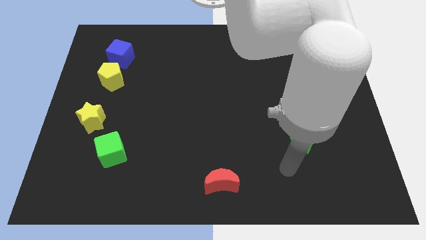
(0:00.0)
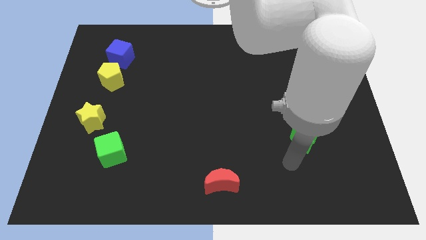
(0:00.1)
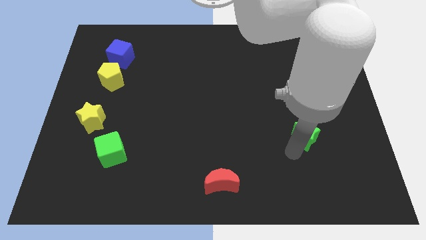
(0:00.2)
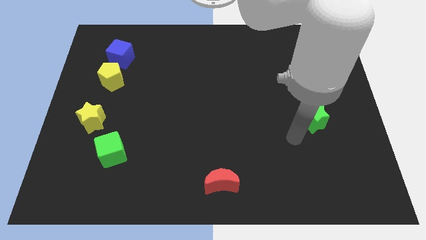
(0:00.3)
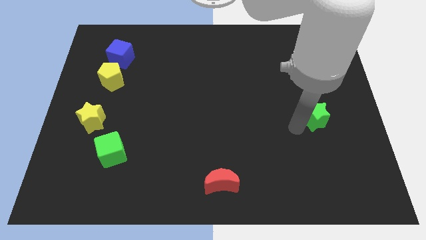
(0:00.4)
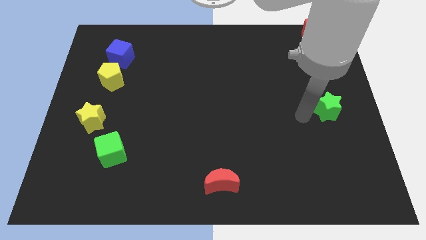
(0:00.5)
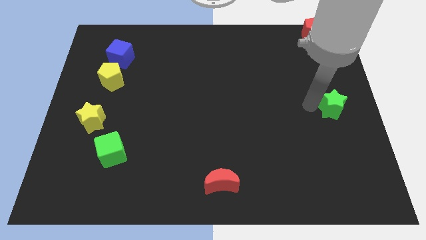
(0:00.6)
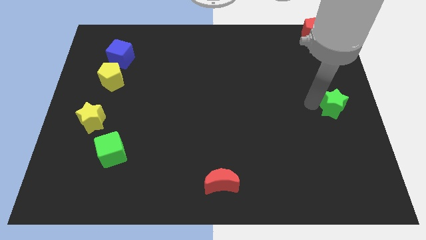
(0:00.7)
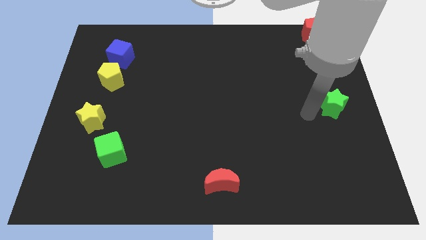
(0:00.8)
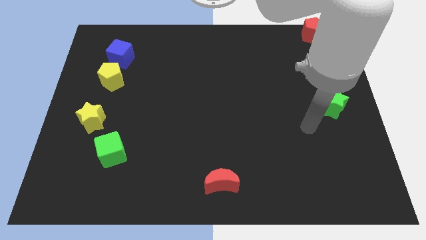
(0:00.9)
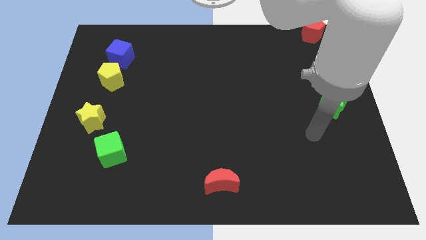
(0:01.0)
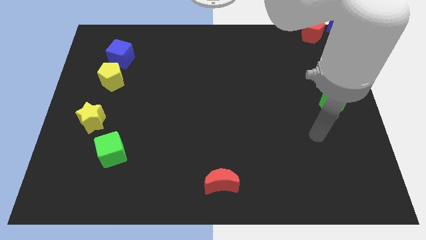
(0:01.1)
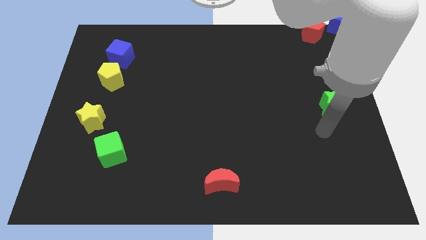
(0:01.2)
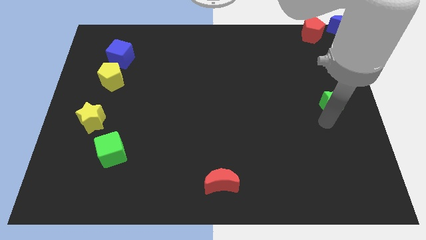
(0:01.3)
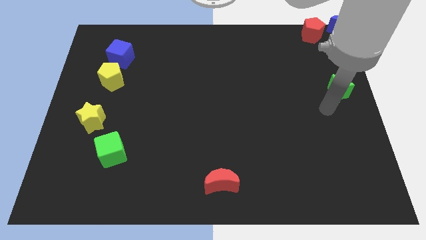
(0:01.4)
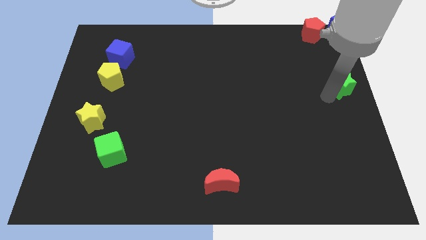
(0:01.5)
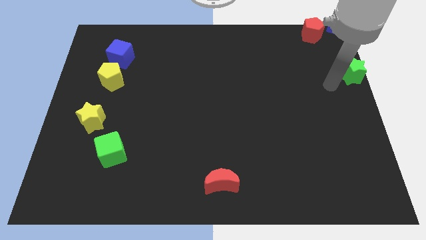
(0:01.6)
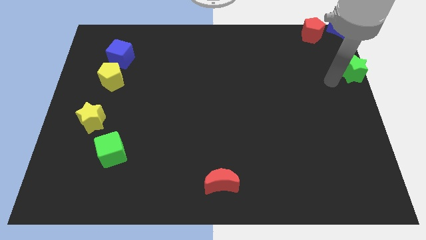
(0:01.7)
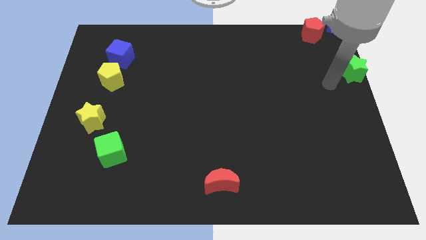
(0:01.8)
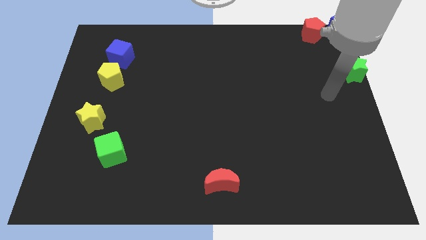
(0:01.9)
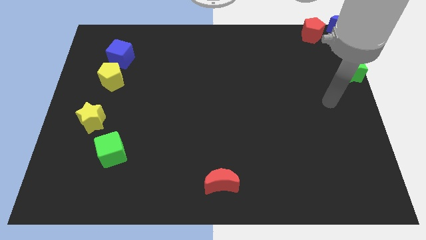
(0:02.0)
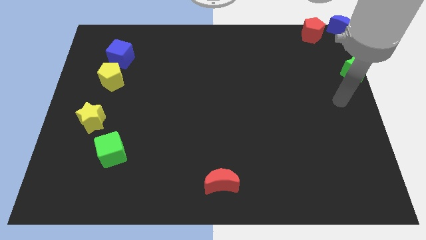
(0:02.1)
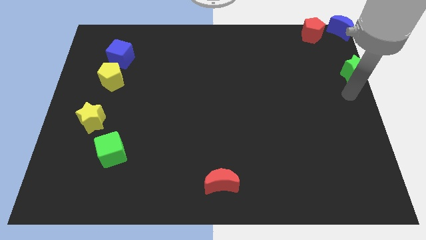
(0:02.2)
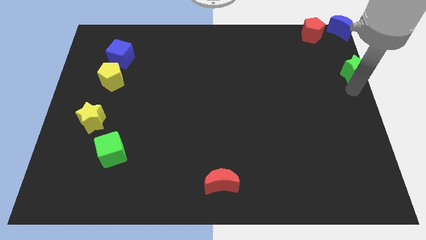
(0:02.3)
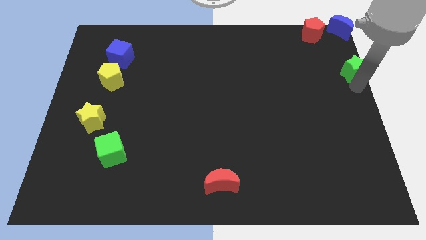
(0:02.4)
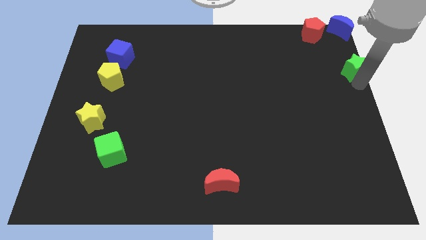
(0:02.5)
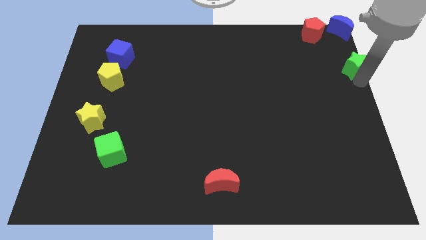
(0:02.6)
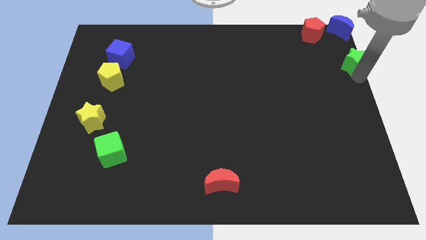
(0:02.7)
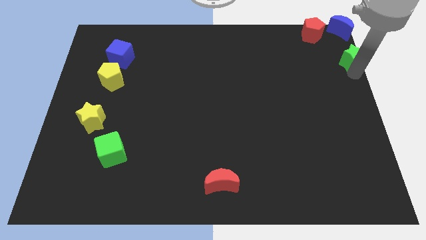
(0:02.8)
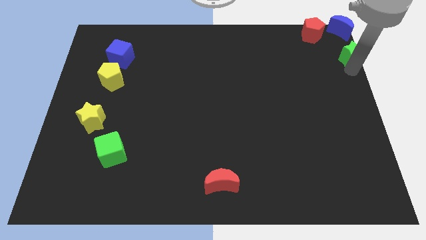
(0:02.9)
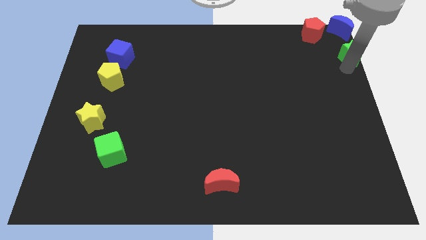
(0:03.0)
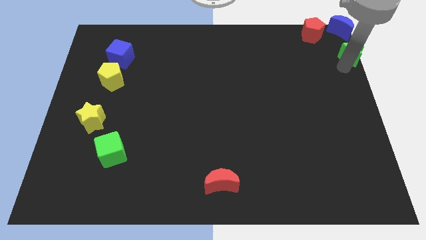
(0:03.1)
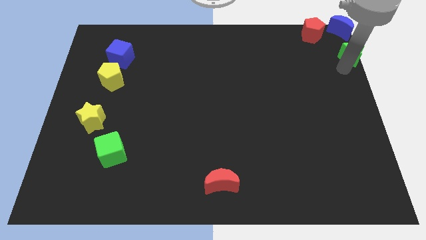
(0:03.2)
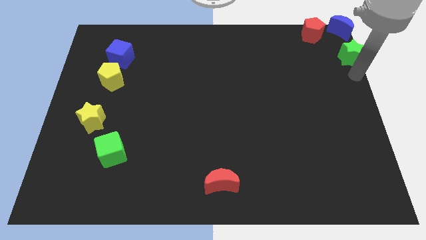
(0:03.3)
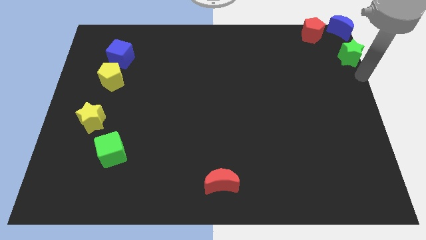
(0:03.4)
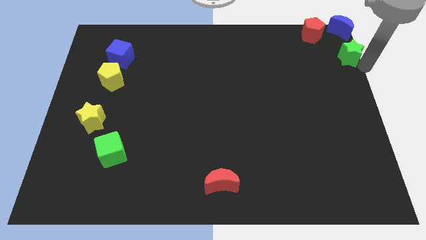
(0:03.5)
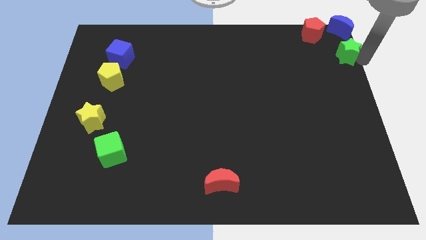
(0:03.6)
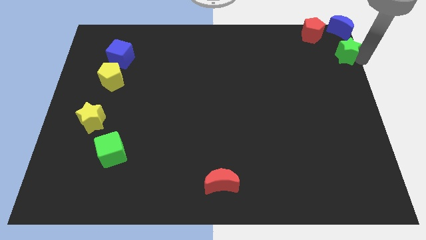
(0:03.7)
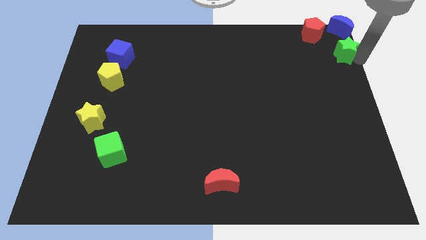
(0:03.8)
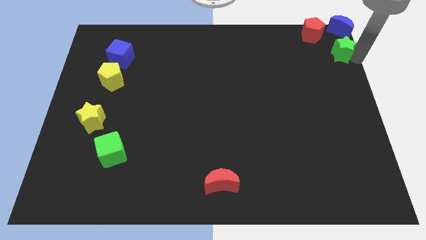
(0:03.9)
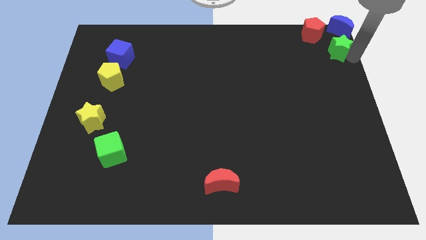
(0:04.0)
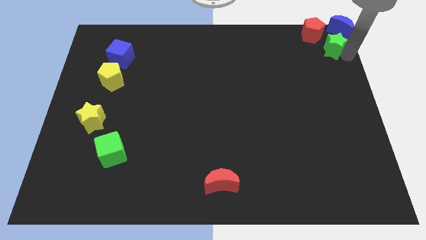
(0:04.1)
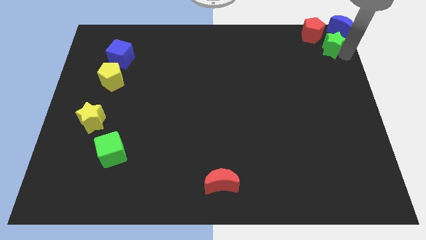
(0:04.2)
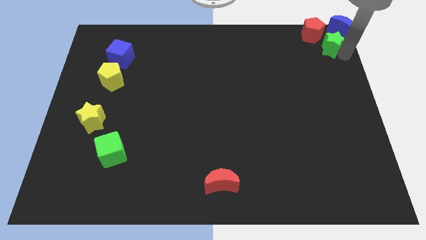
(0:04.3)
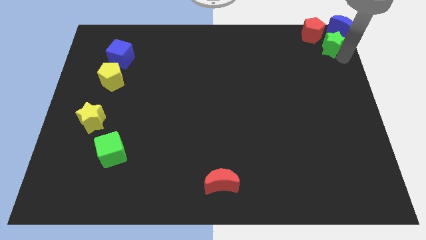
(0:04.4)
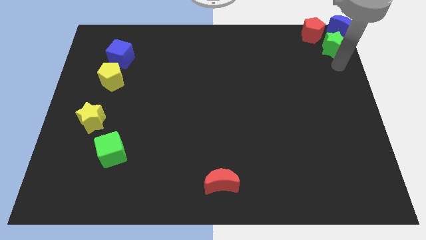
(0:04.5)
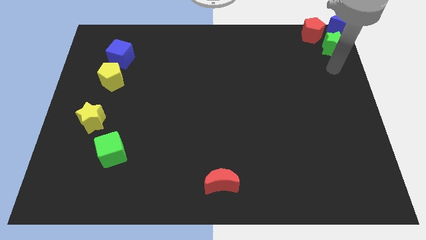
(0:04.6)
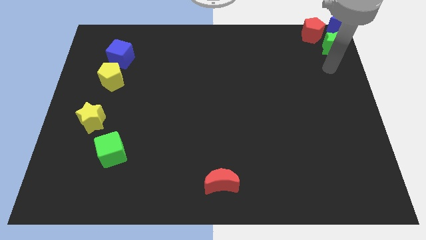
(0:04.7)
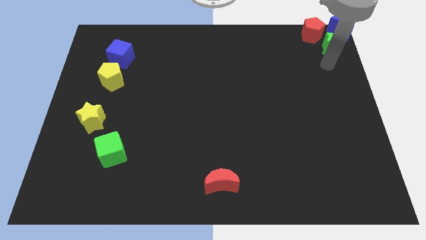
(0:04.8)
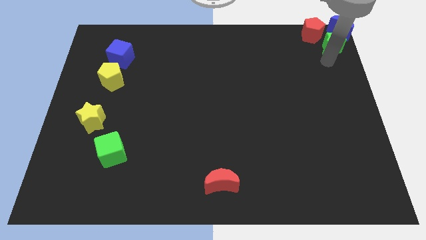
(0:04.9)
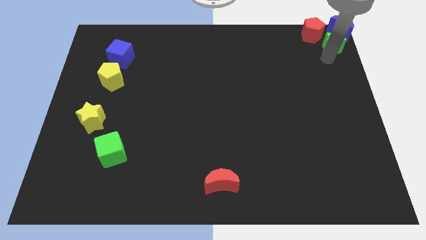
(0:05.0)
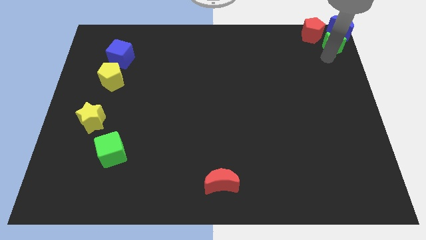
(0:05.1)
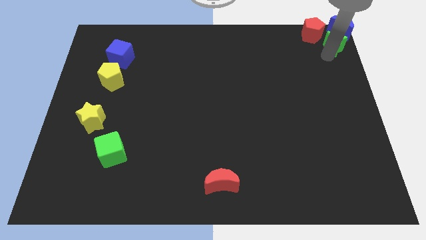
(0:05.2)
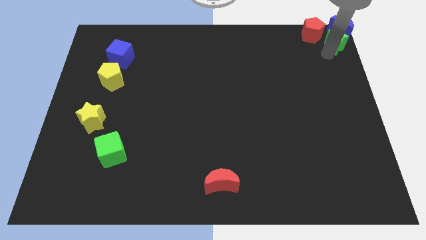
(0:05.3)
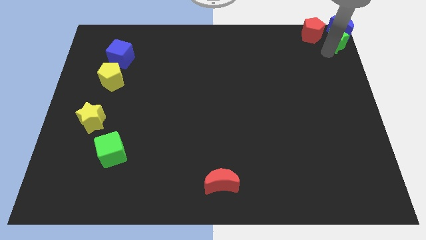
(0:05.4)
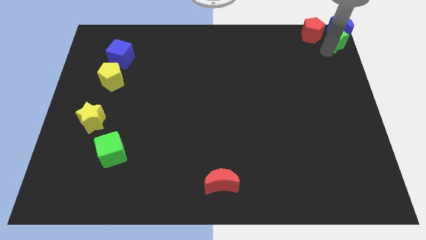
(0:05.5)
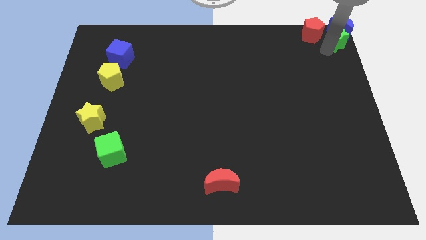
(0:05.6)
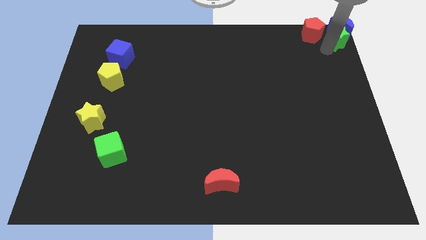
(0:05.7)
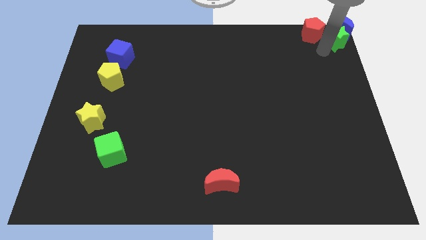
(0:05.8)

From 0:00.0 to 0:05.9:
place the green star below the blue moon

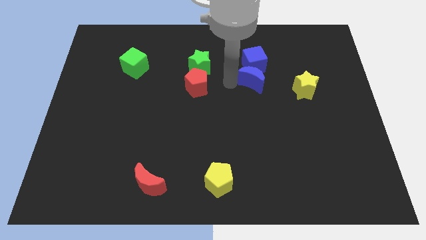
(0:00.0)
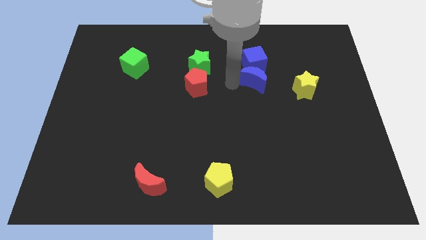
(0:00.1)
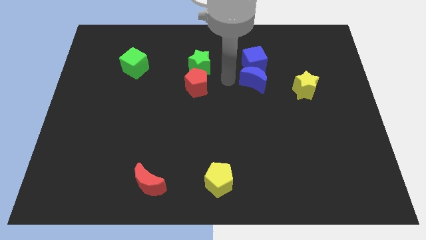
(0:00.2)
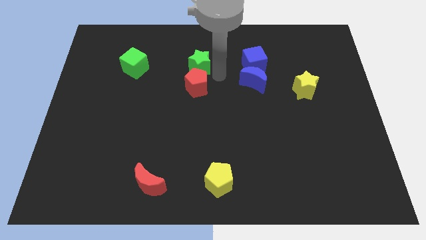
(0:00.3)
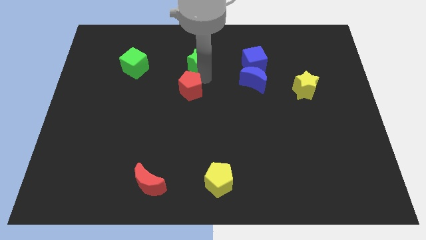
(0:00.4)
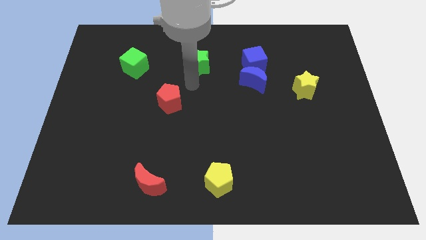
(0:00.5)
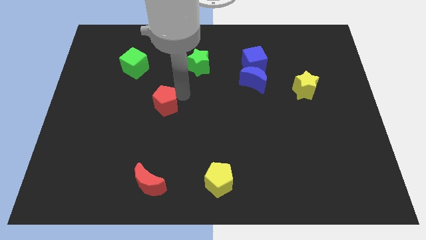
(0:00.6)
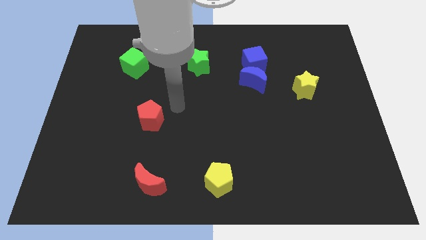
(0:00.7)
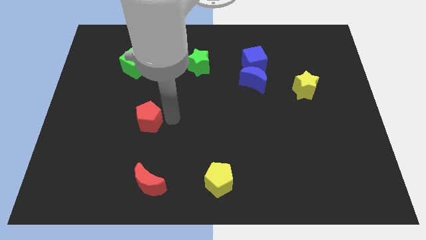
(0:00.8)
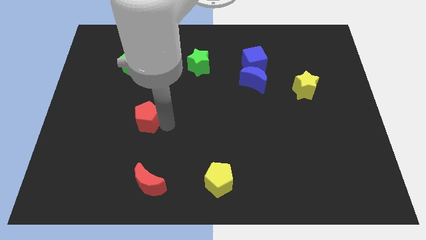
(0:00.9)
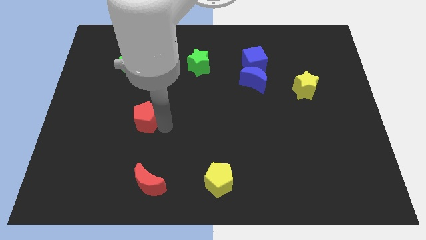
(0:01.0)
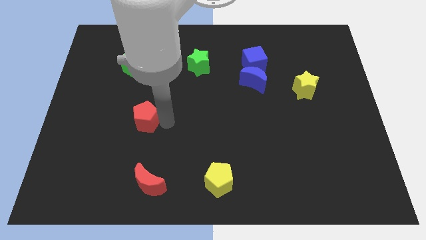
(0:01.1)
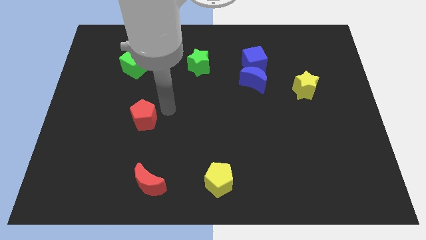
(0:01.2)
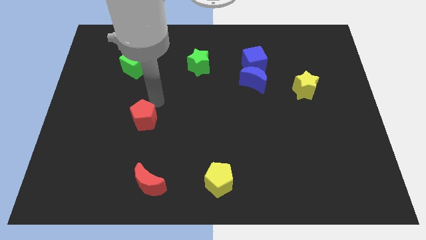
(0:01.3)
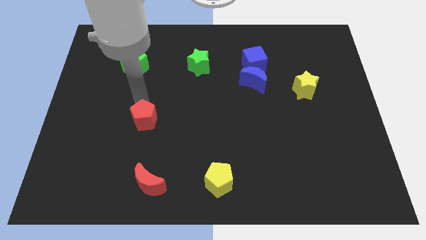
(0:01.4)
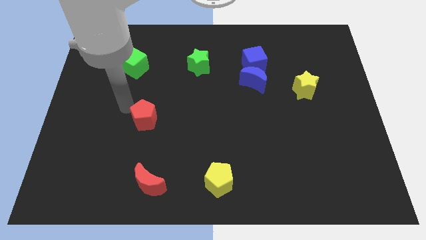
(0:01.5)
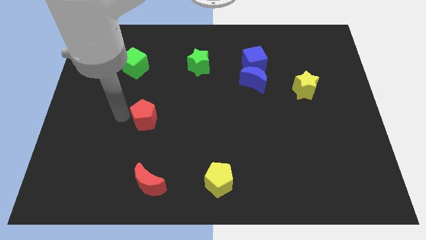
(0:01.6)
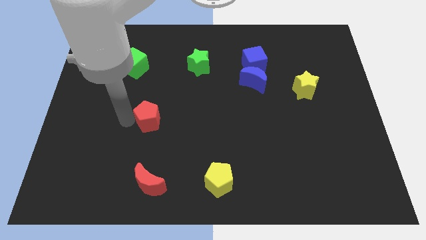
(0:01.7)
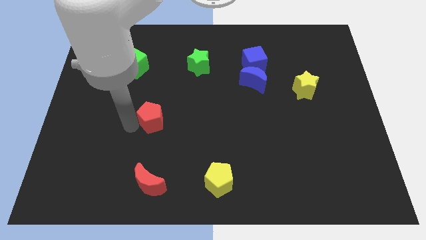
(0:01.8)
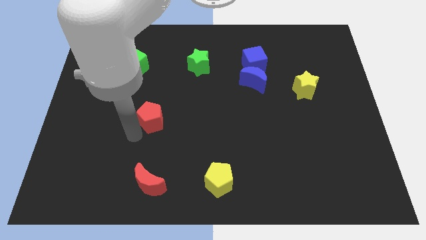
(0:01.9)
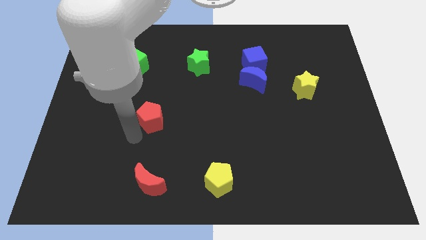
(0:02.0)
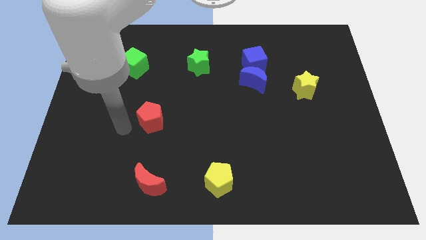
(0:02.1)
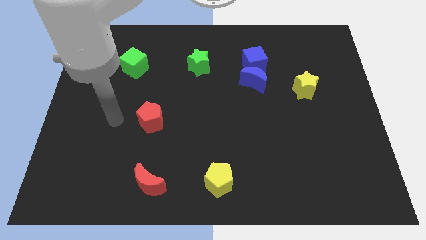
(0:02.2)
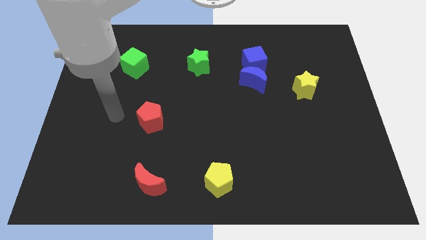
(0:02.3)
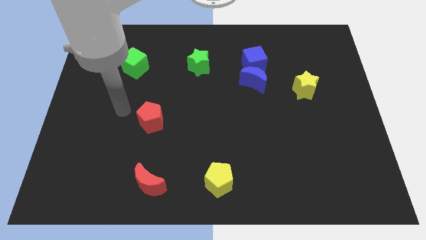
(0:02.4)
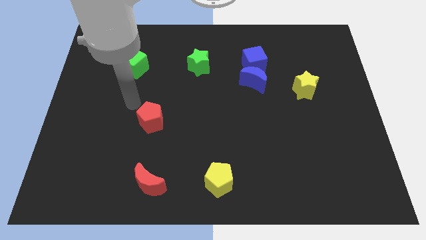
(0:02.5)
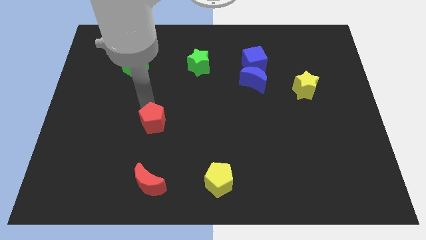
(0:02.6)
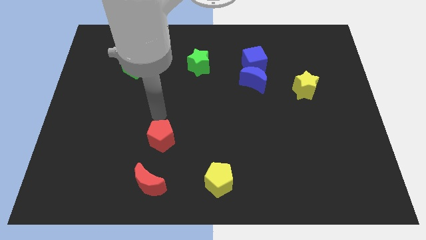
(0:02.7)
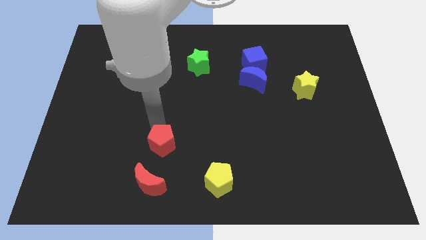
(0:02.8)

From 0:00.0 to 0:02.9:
push the red pentagon towards red crescent
